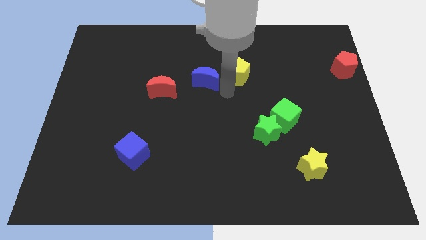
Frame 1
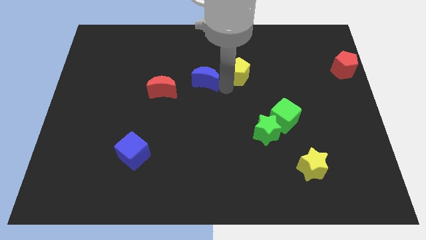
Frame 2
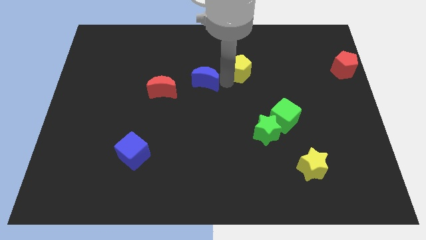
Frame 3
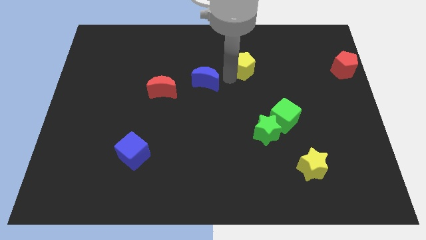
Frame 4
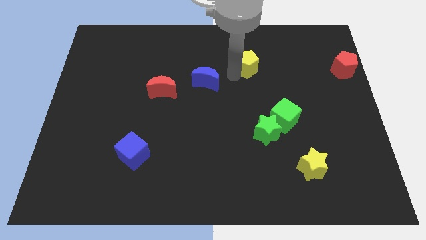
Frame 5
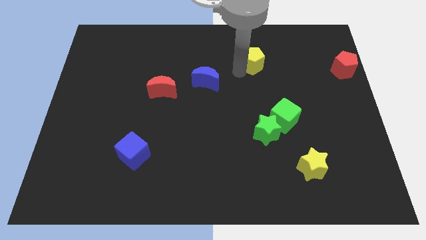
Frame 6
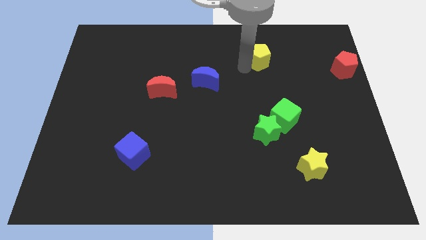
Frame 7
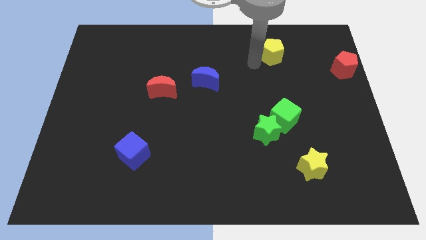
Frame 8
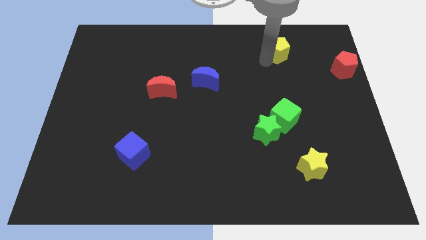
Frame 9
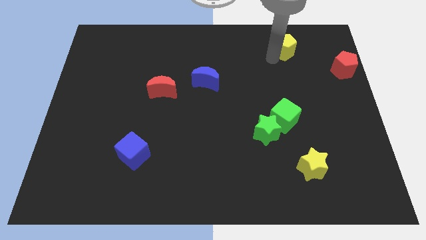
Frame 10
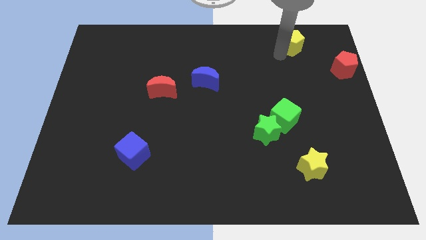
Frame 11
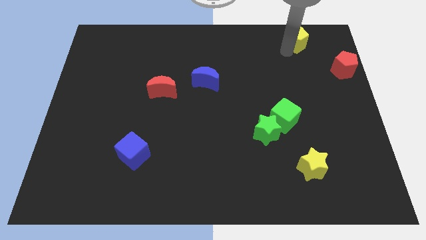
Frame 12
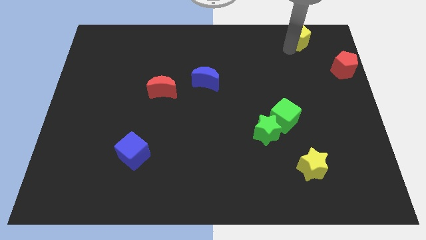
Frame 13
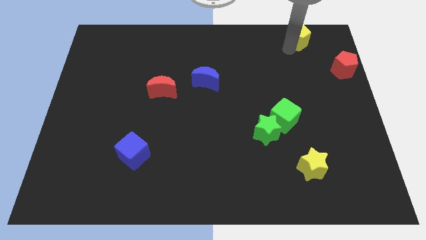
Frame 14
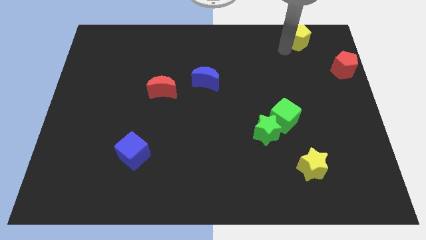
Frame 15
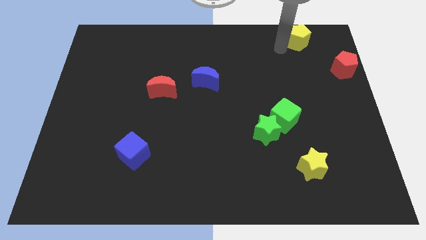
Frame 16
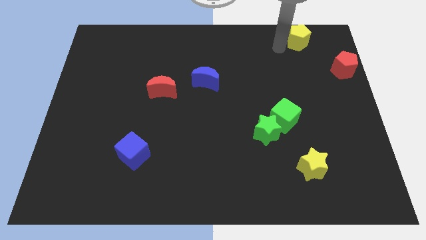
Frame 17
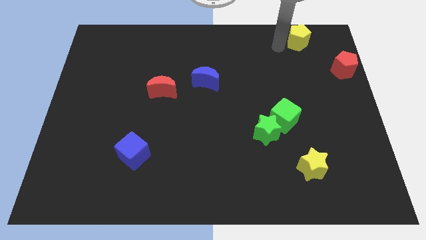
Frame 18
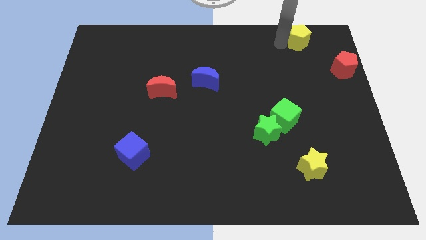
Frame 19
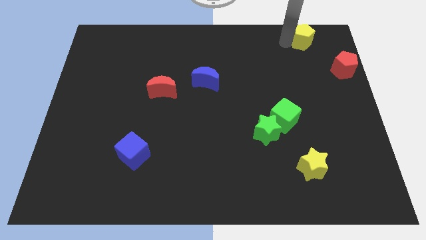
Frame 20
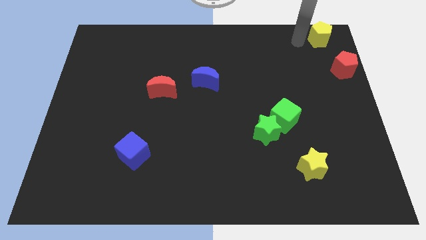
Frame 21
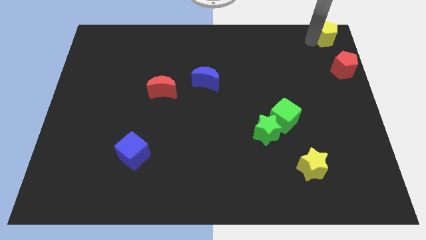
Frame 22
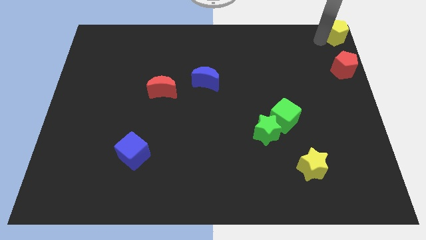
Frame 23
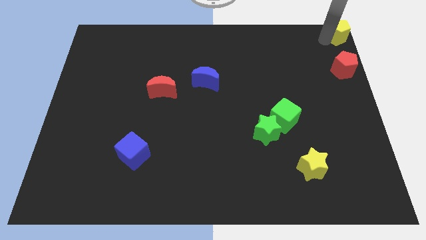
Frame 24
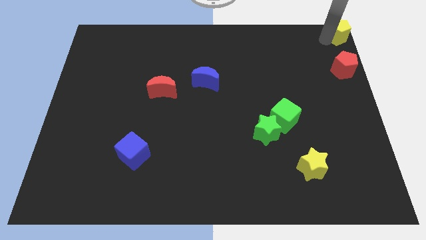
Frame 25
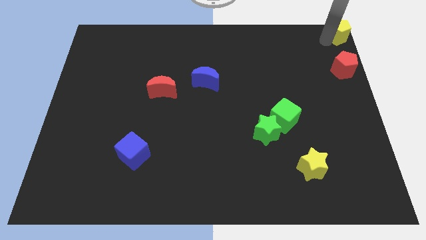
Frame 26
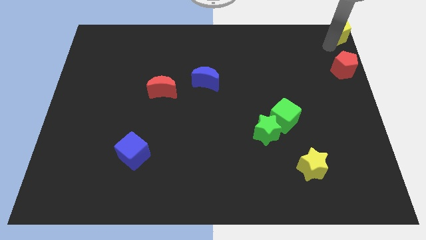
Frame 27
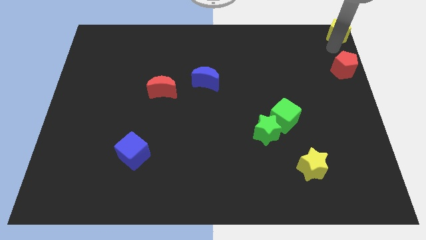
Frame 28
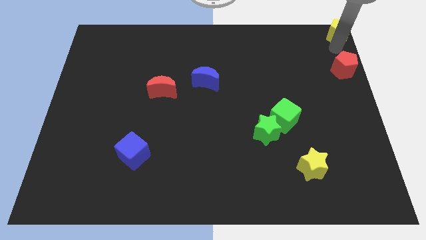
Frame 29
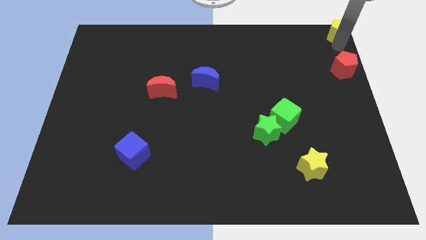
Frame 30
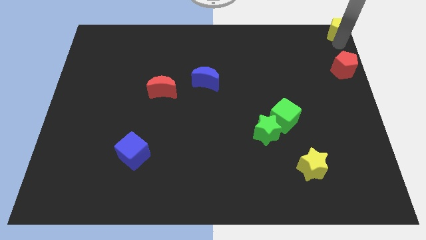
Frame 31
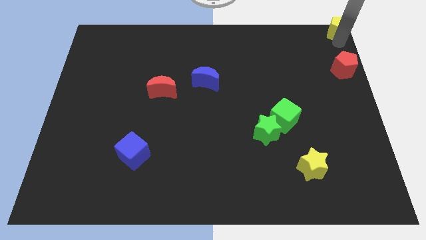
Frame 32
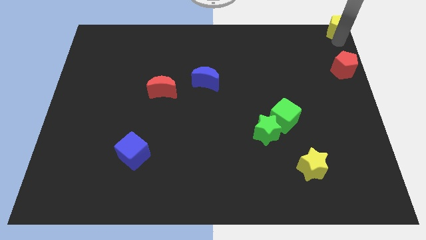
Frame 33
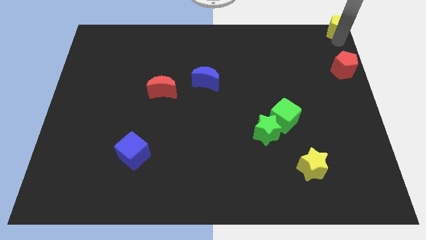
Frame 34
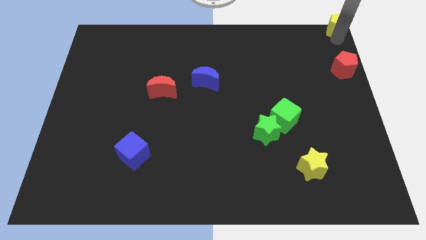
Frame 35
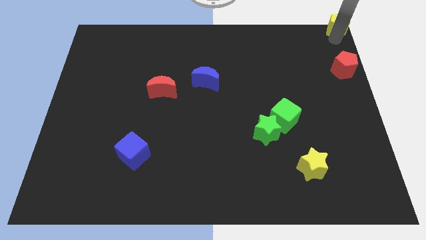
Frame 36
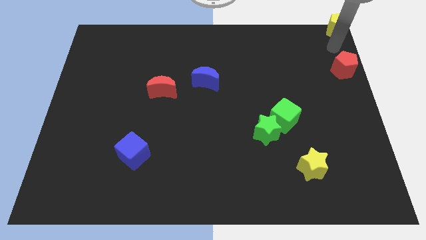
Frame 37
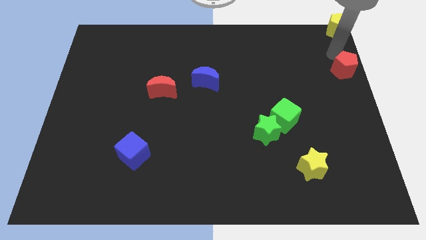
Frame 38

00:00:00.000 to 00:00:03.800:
push the yellow pentagon to the top right corner of the board

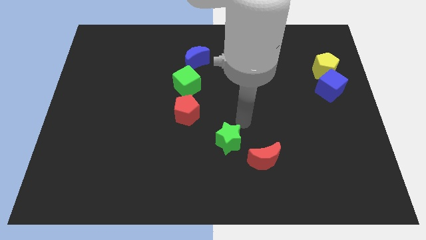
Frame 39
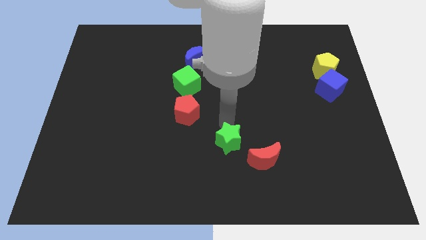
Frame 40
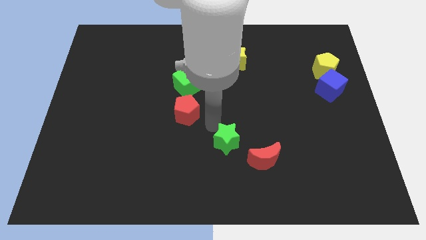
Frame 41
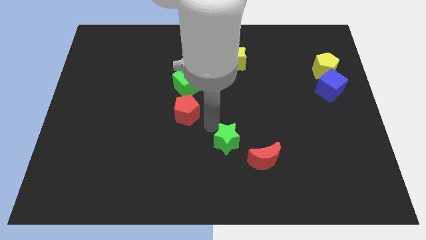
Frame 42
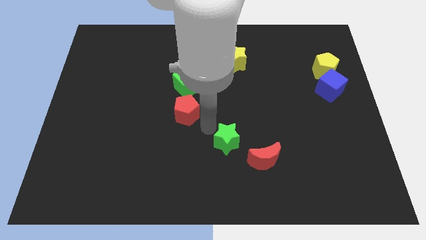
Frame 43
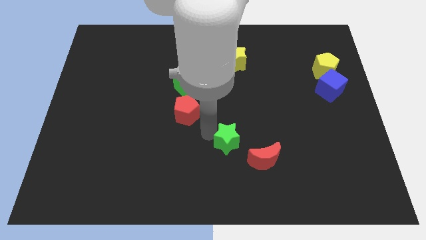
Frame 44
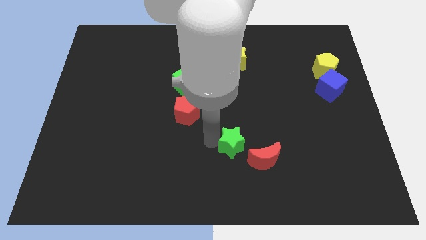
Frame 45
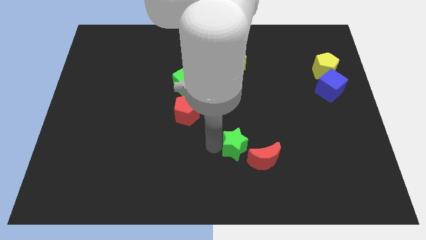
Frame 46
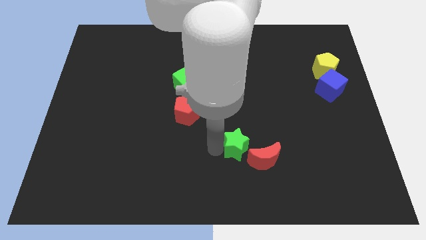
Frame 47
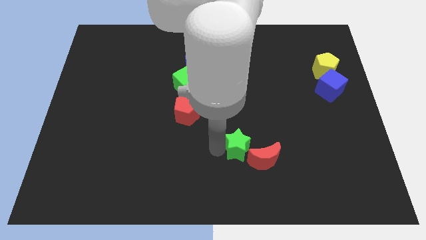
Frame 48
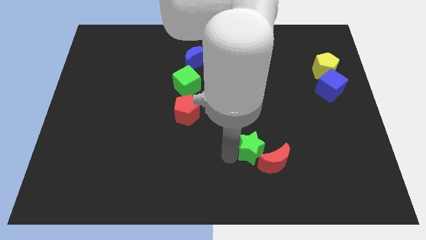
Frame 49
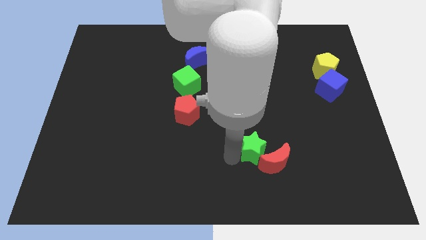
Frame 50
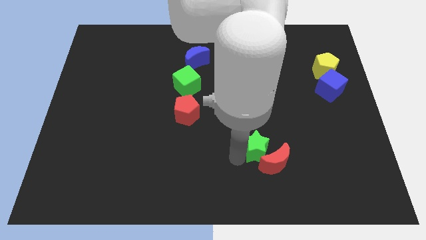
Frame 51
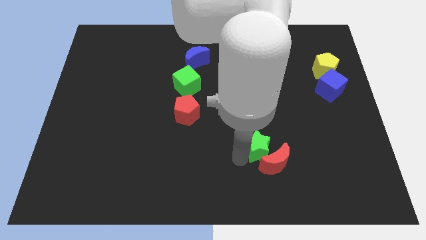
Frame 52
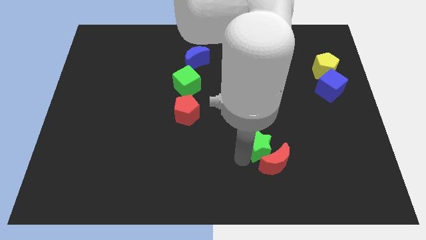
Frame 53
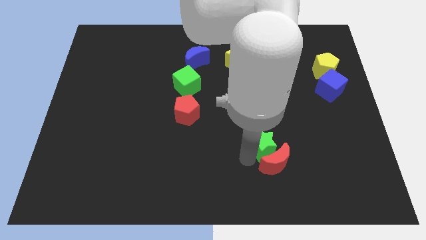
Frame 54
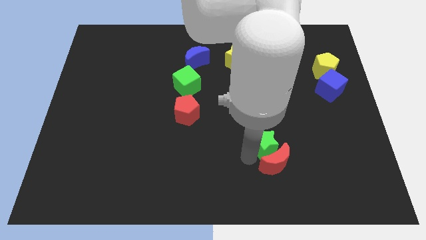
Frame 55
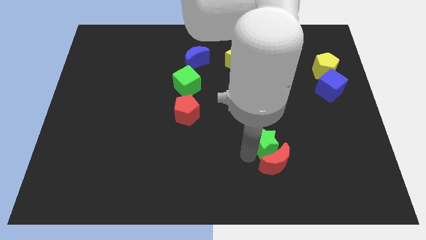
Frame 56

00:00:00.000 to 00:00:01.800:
push the green star into the red moon

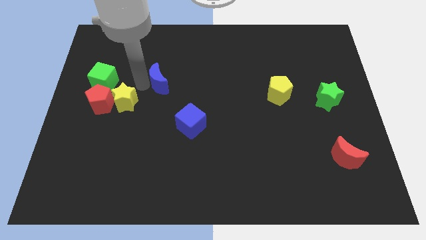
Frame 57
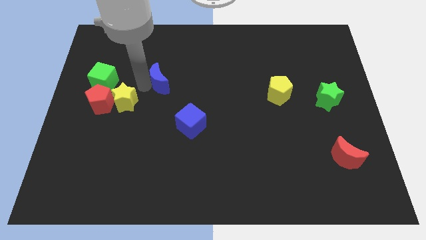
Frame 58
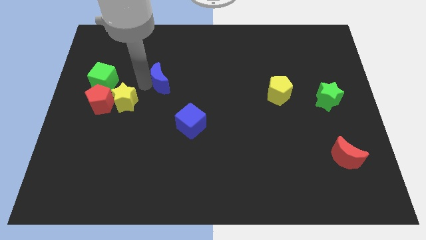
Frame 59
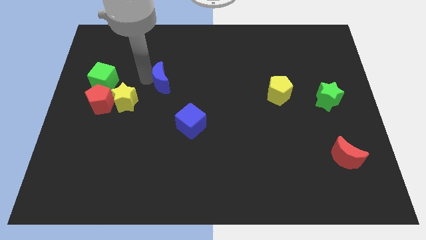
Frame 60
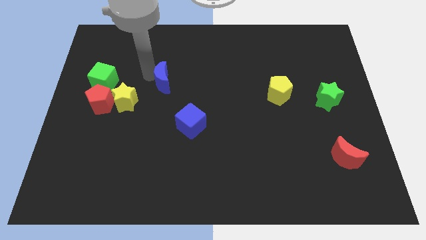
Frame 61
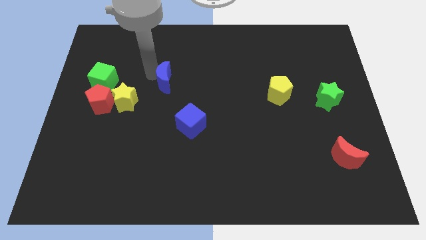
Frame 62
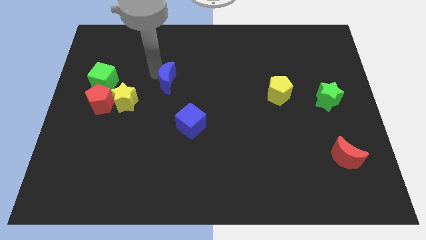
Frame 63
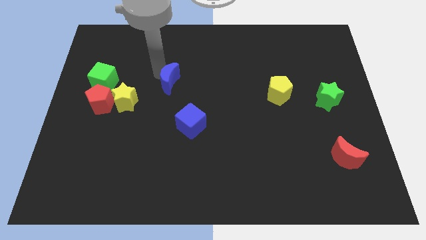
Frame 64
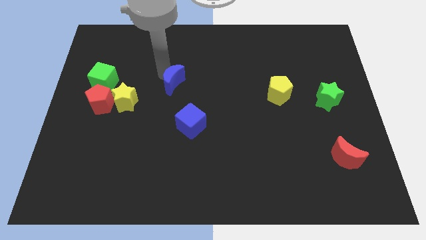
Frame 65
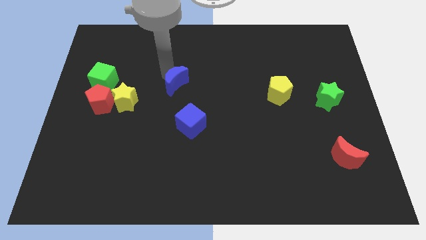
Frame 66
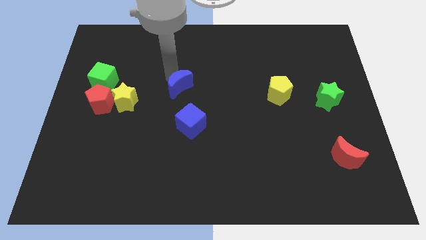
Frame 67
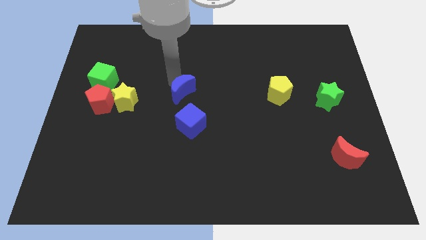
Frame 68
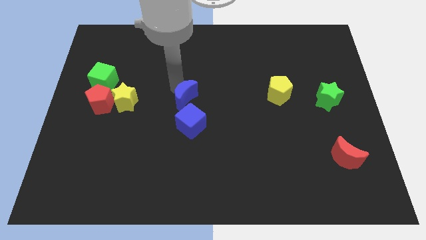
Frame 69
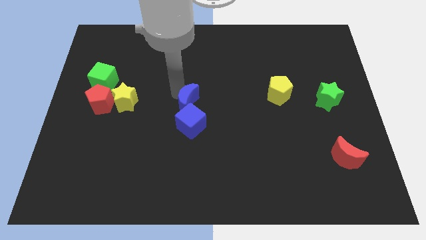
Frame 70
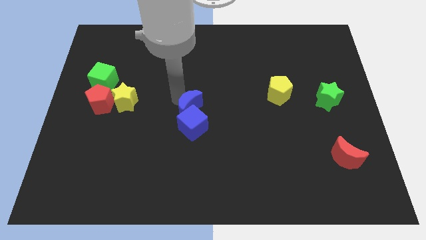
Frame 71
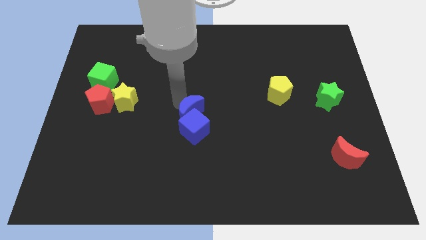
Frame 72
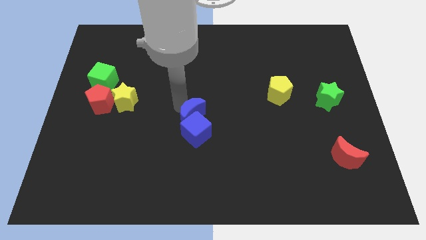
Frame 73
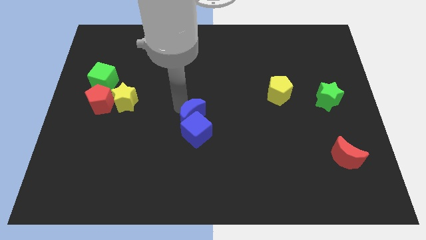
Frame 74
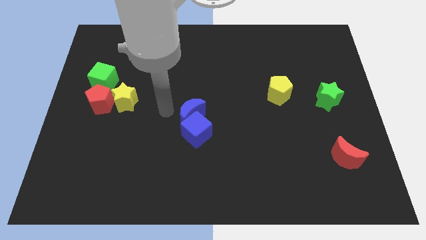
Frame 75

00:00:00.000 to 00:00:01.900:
move the blue crescent into the blue cube

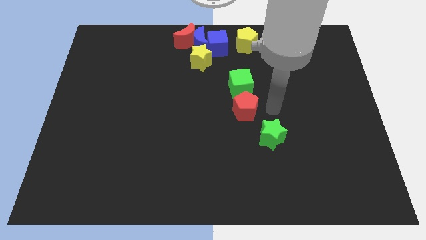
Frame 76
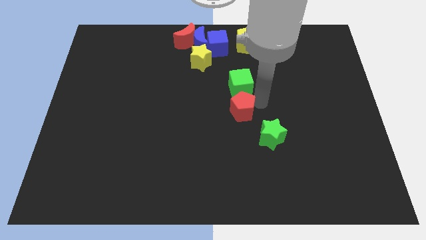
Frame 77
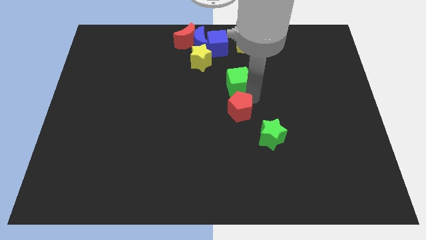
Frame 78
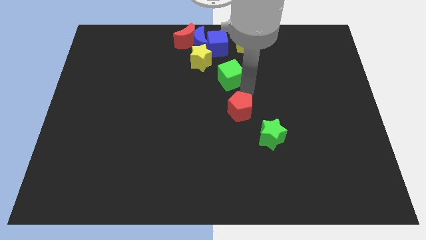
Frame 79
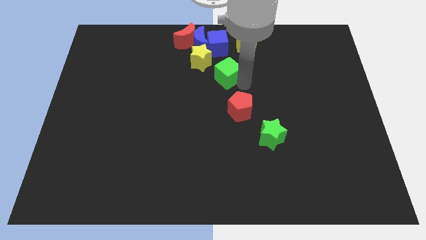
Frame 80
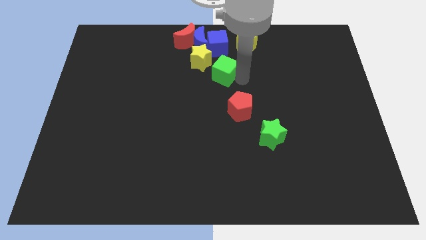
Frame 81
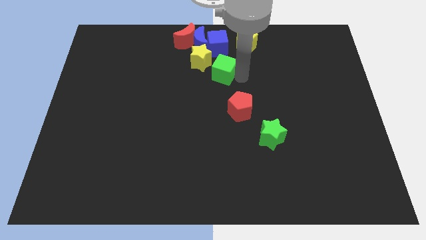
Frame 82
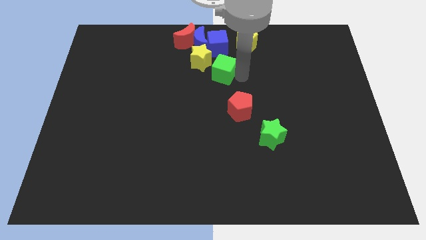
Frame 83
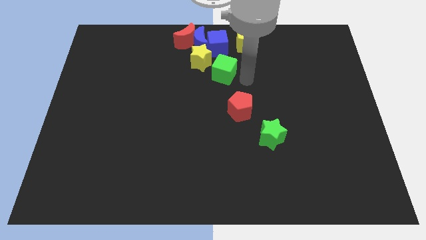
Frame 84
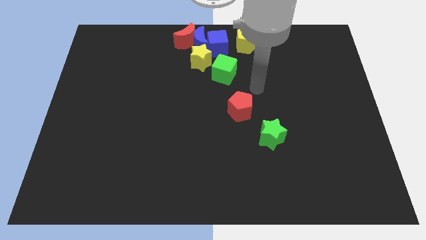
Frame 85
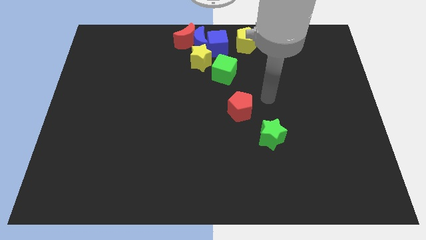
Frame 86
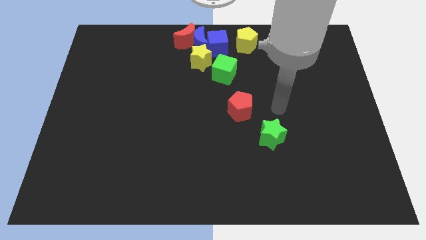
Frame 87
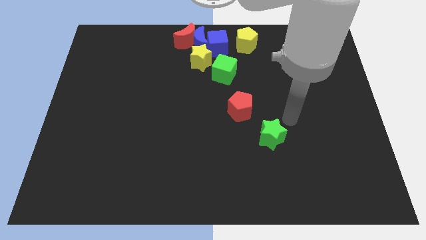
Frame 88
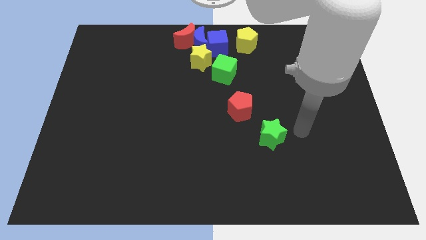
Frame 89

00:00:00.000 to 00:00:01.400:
place the green cube under the blue cube
